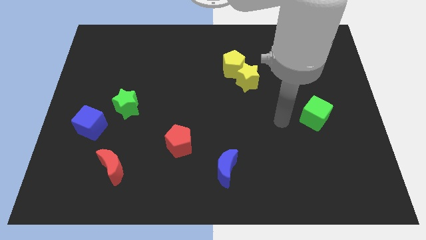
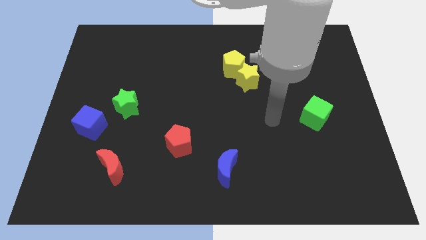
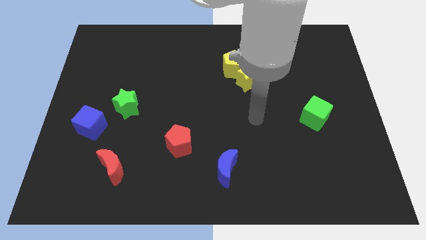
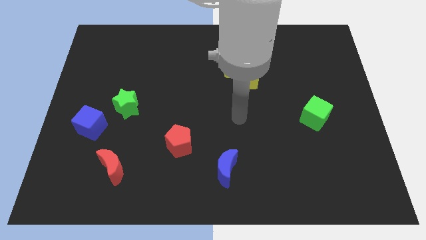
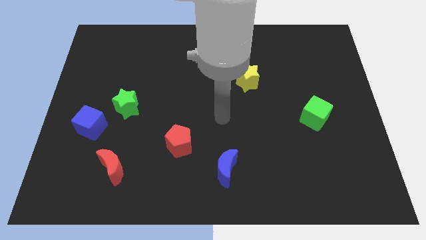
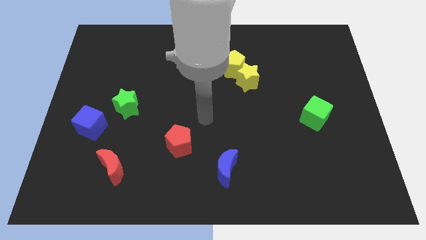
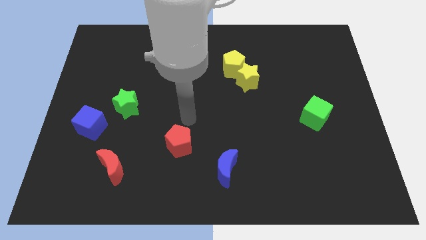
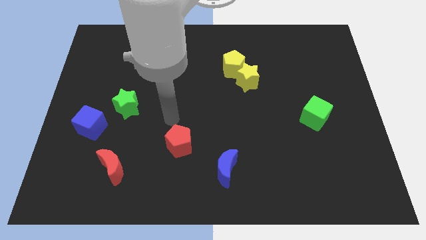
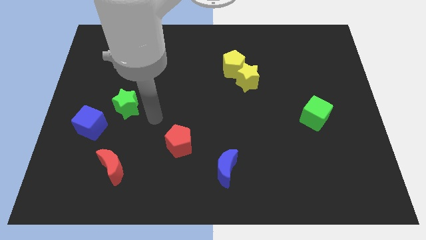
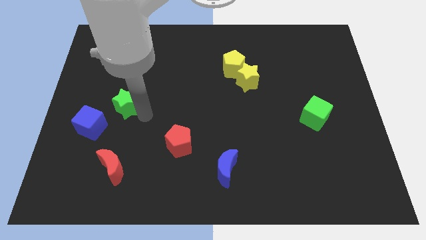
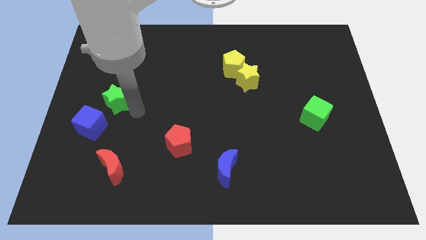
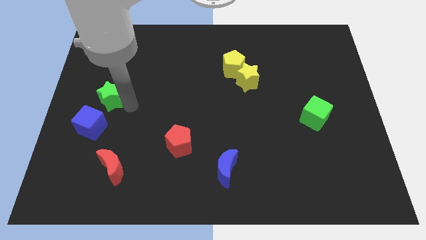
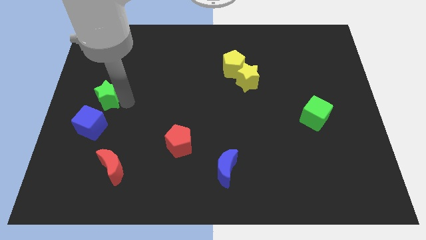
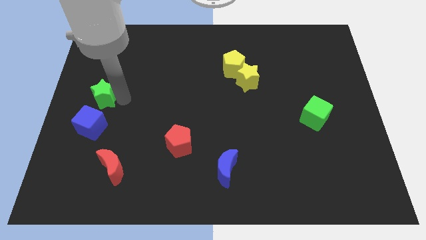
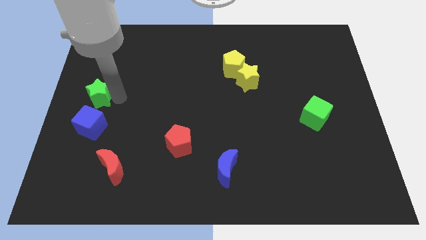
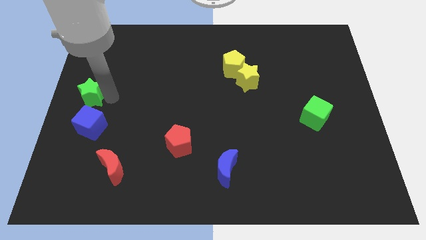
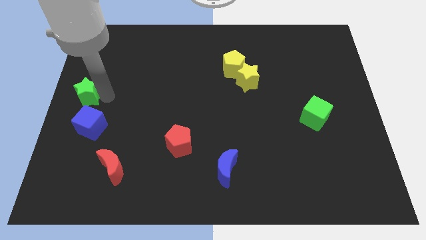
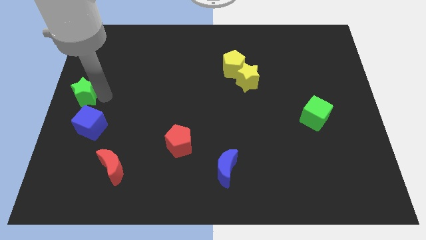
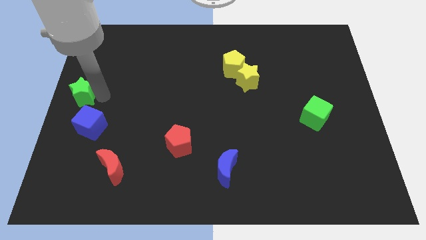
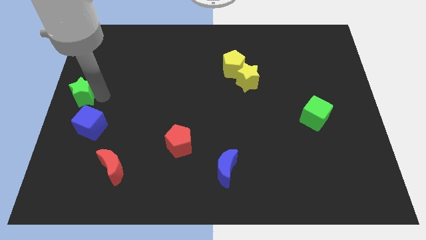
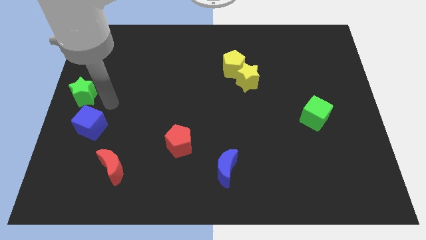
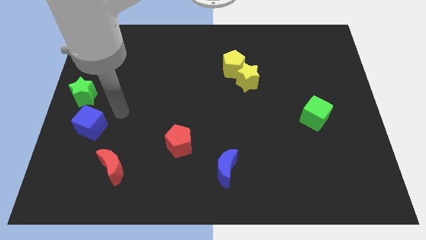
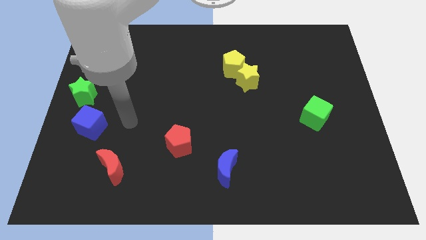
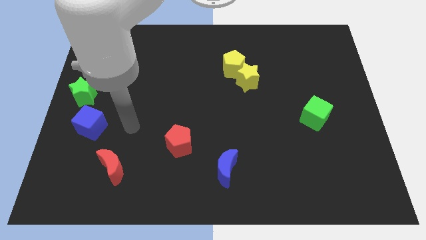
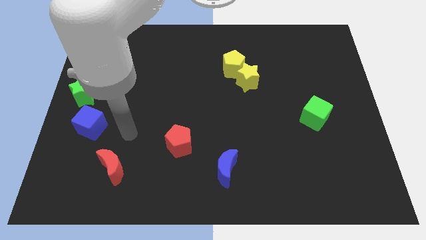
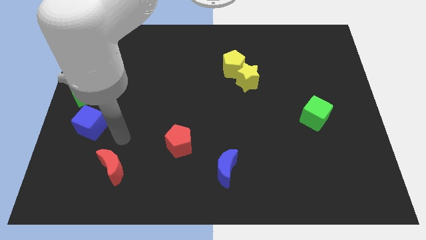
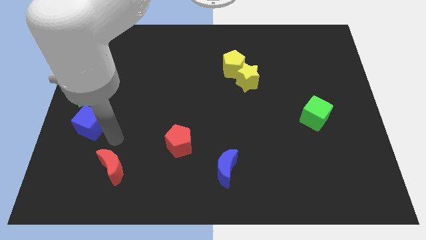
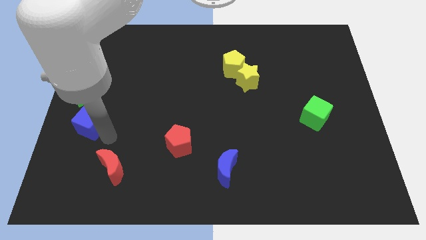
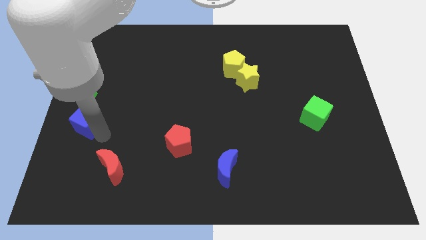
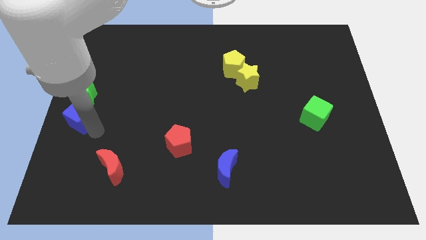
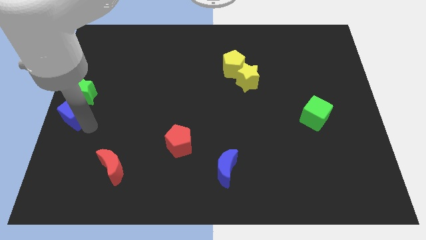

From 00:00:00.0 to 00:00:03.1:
move the green star towards the center left

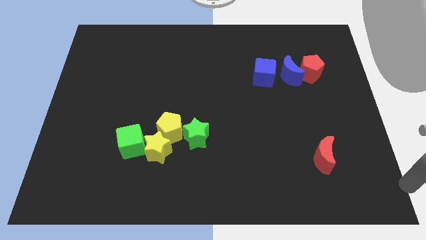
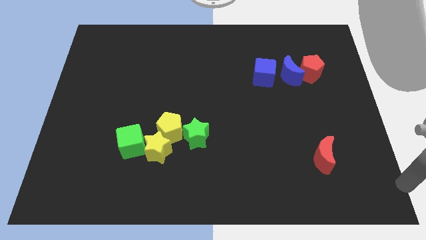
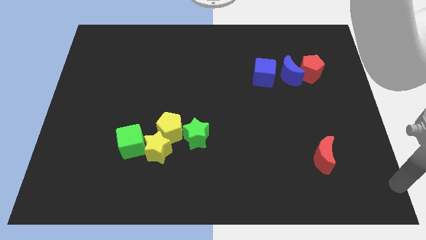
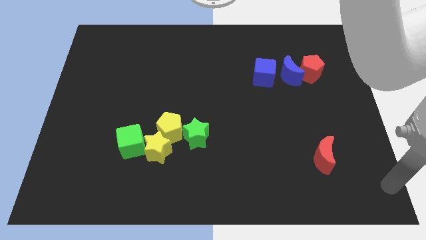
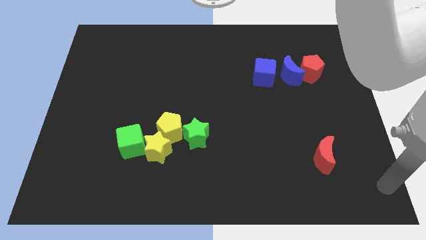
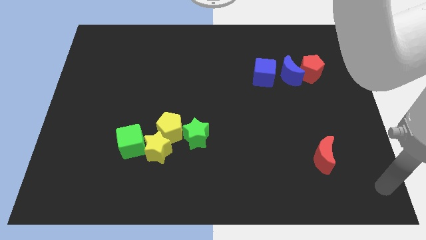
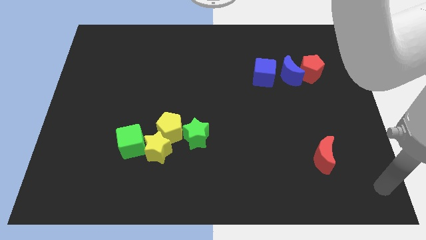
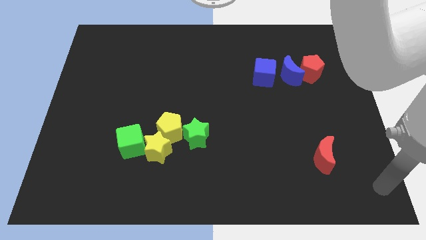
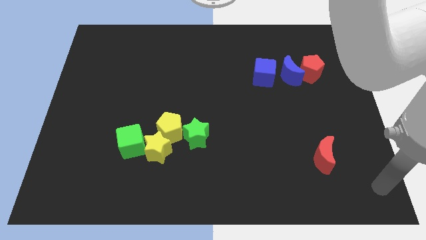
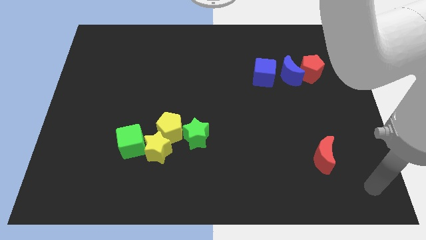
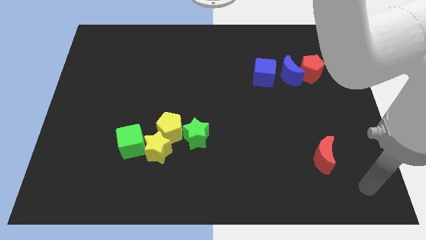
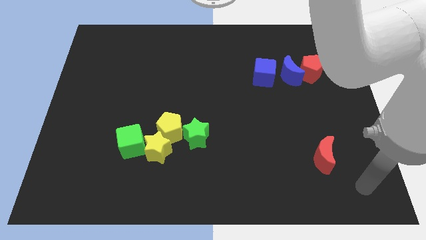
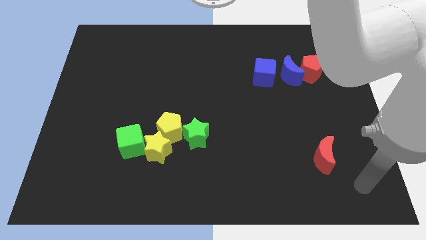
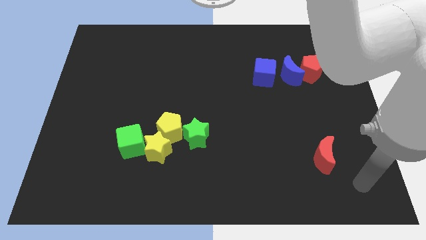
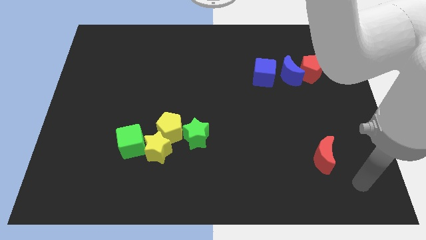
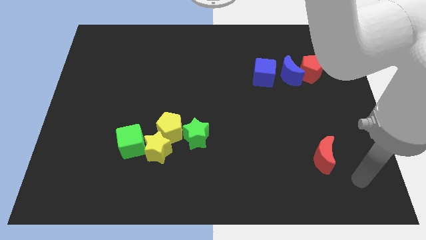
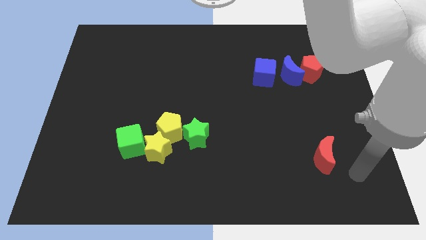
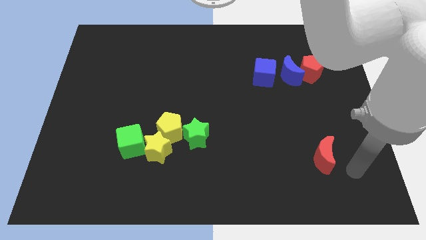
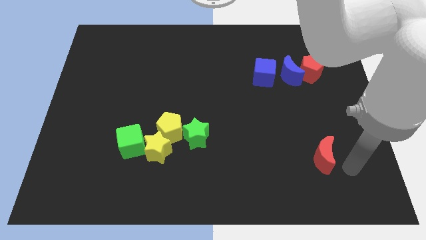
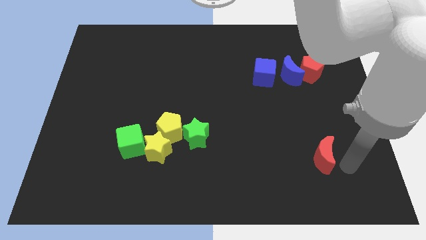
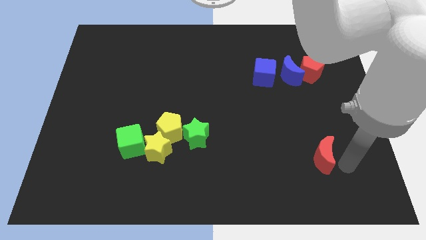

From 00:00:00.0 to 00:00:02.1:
move your arm right to the red crescent

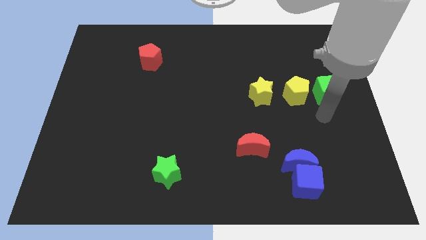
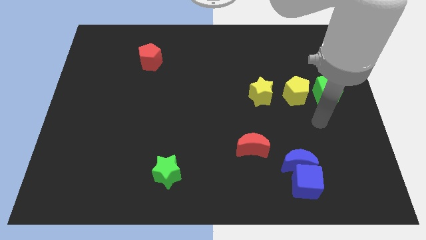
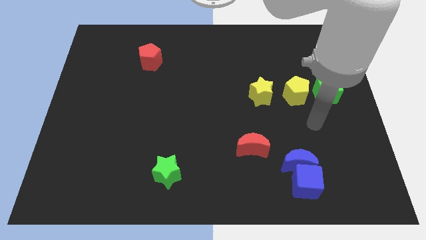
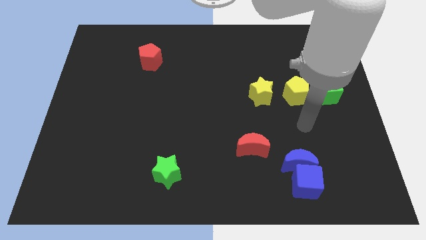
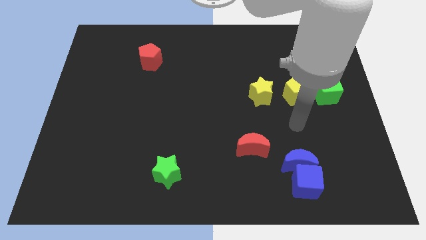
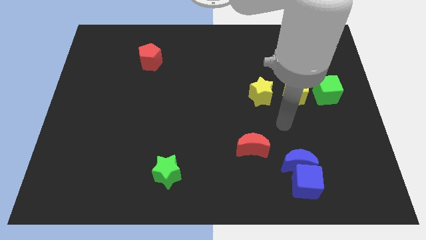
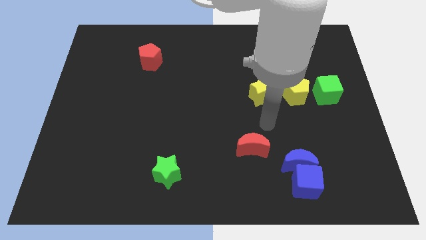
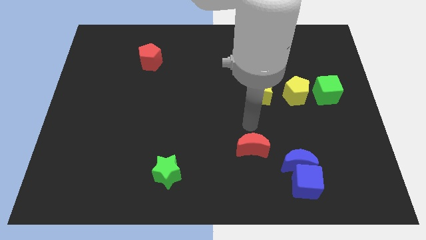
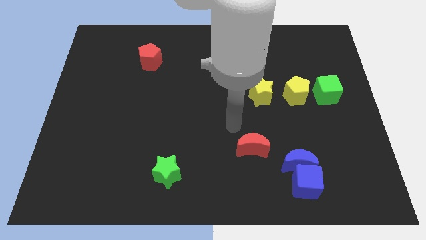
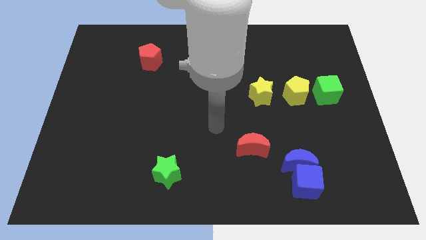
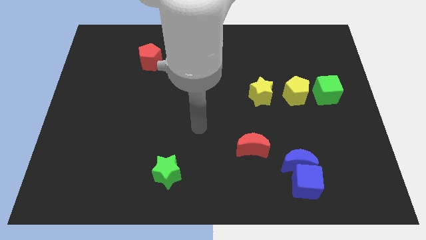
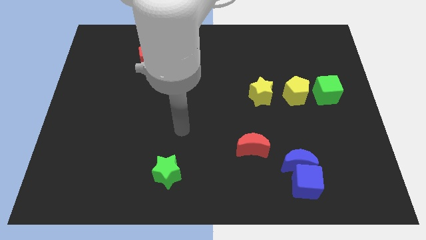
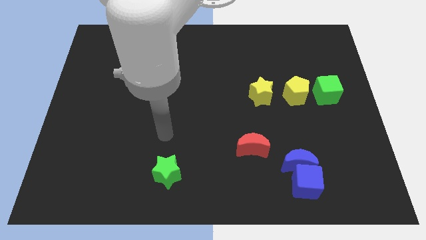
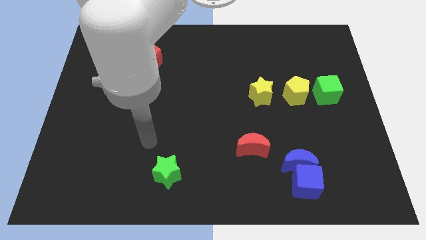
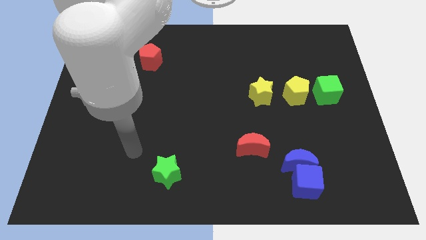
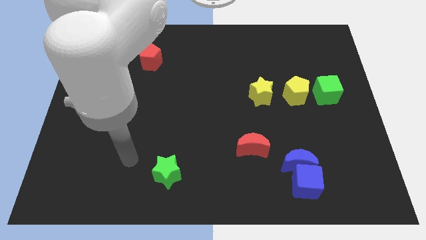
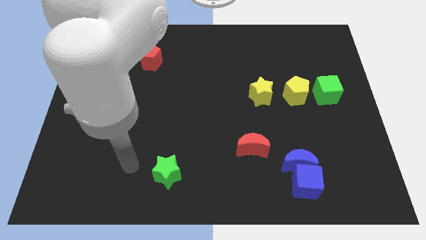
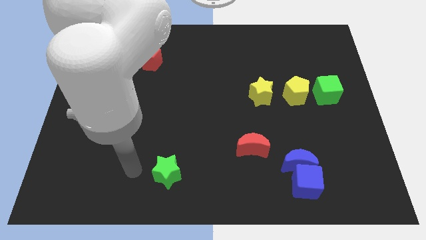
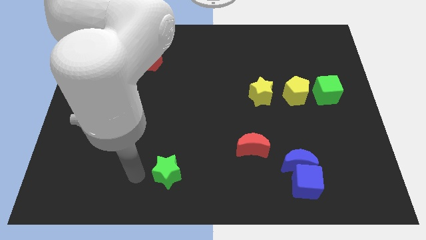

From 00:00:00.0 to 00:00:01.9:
move your arm to the left side of the green star

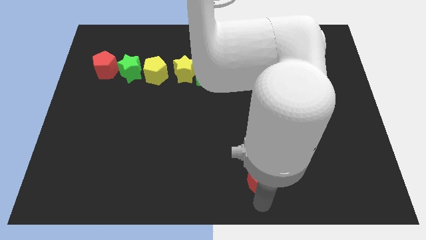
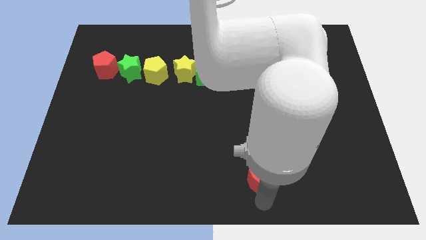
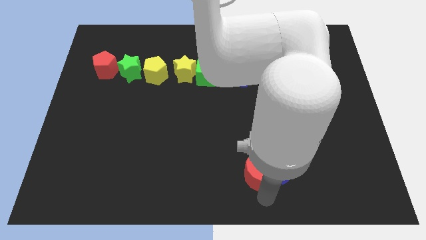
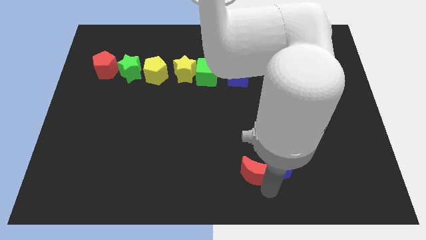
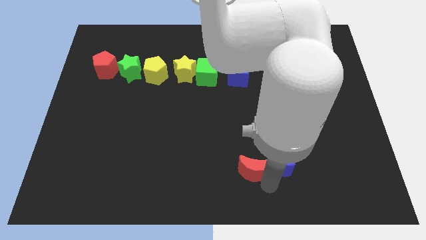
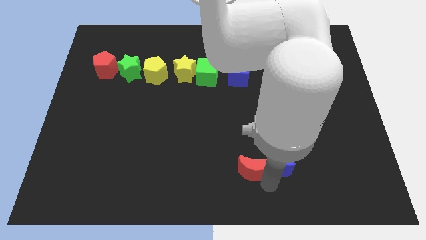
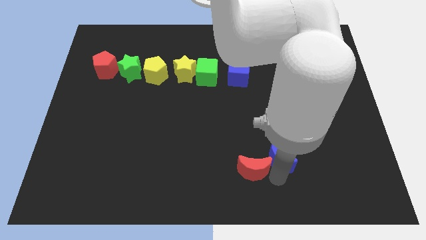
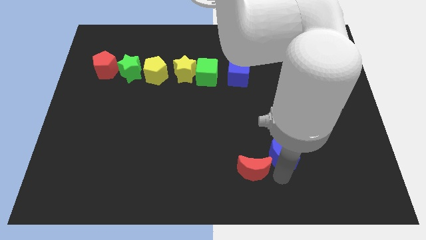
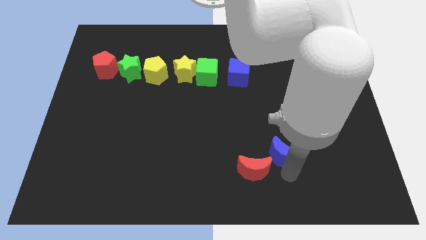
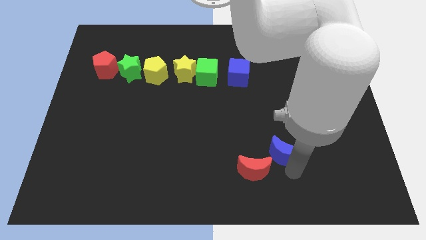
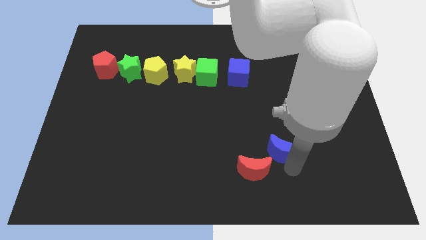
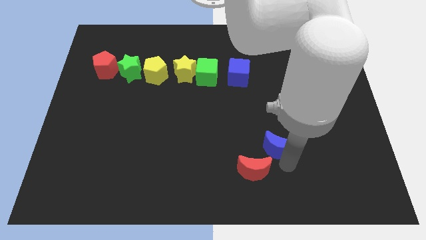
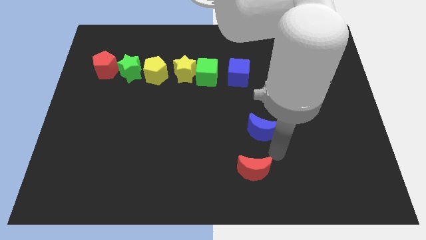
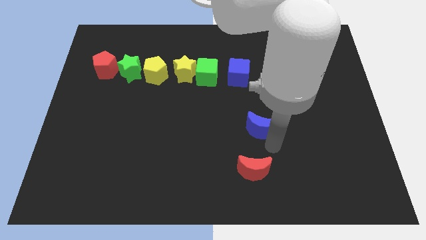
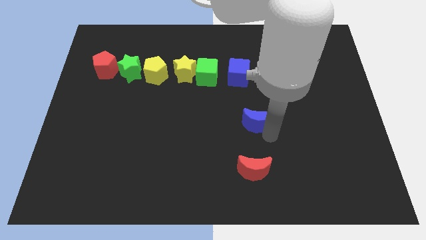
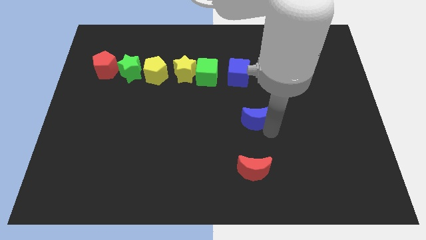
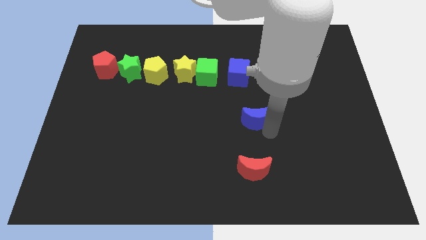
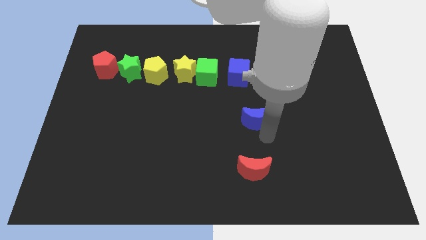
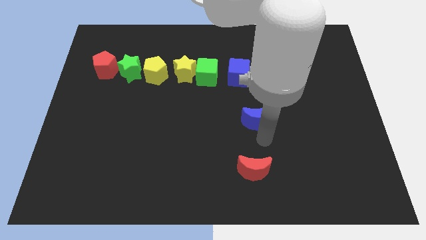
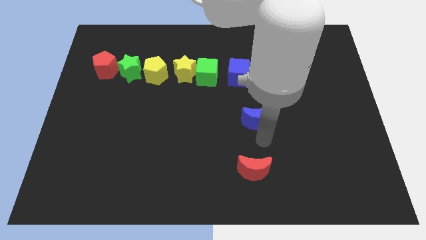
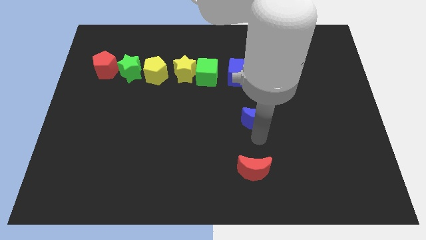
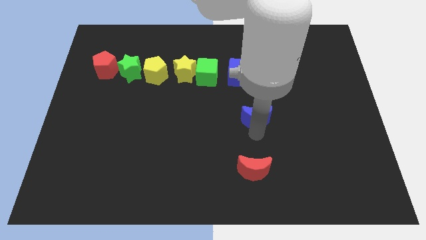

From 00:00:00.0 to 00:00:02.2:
push blue crescent above red crescent
